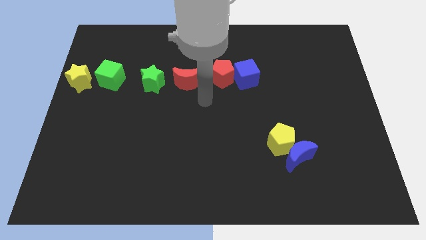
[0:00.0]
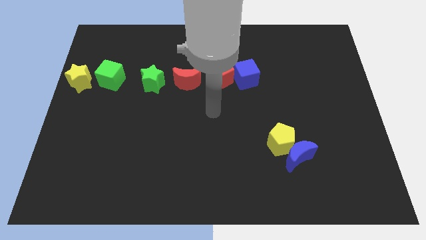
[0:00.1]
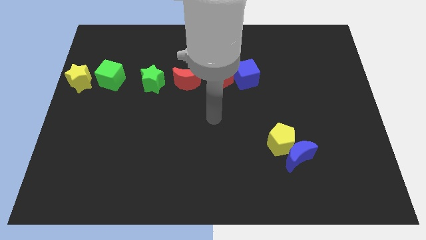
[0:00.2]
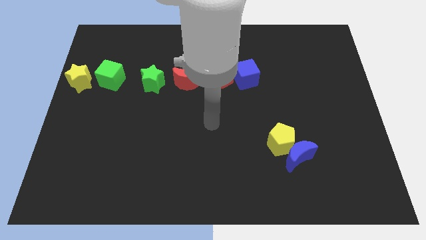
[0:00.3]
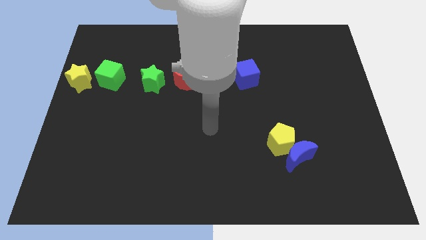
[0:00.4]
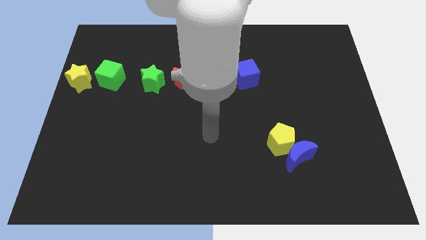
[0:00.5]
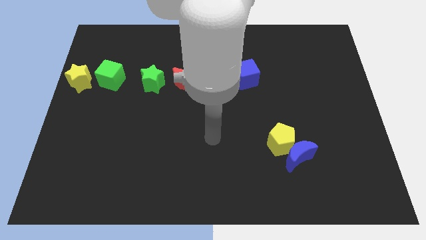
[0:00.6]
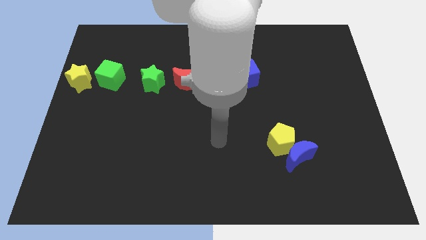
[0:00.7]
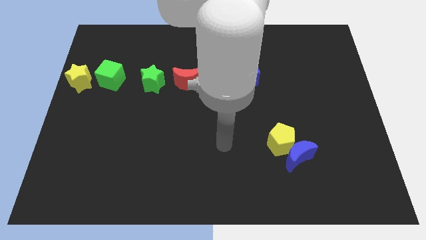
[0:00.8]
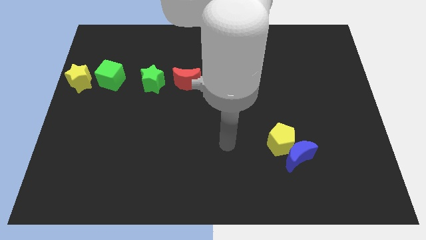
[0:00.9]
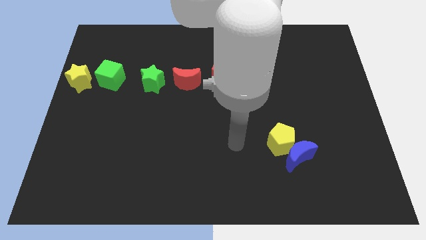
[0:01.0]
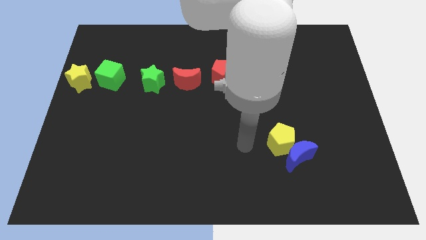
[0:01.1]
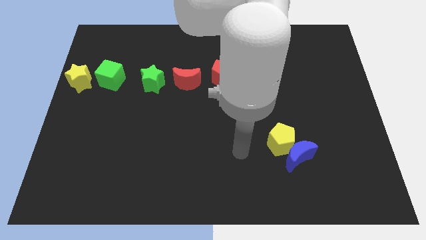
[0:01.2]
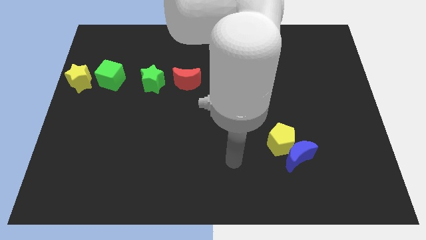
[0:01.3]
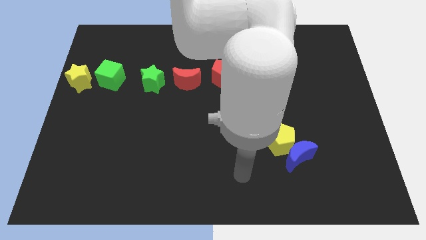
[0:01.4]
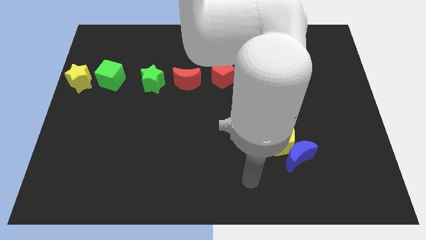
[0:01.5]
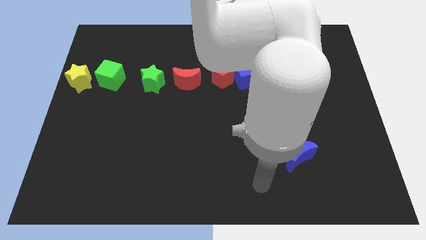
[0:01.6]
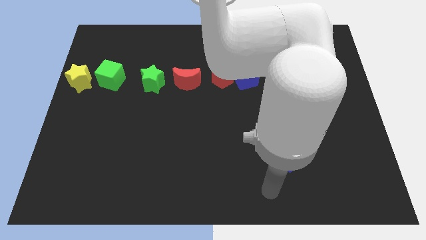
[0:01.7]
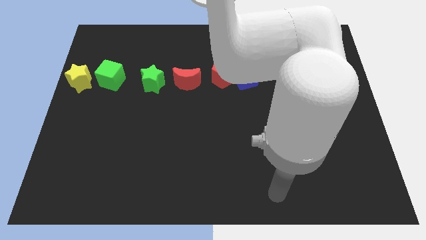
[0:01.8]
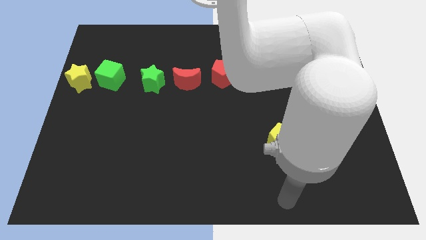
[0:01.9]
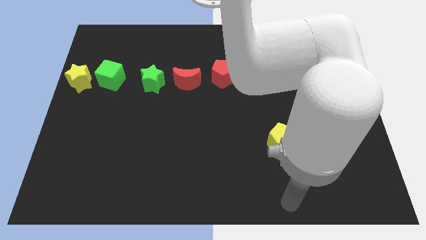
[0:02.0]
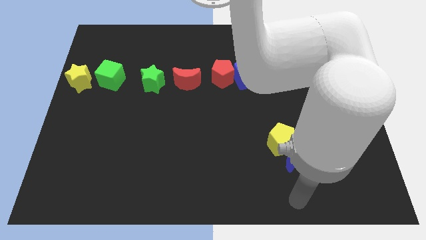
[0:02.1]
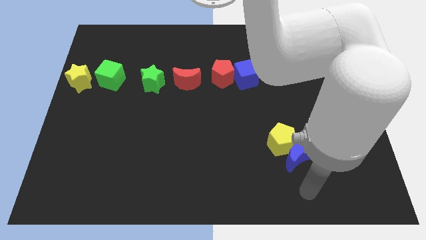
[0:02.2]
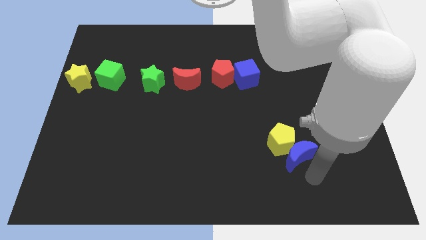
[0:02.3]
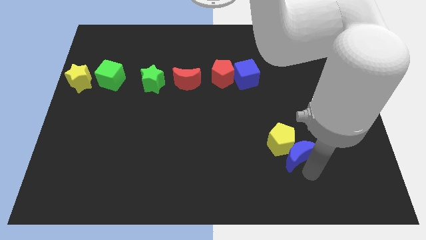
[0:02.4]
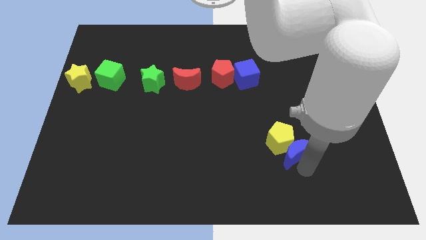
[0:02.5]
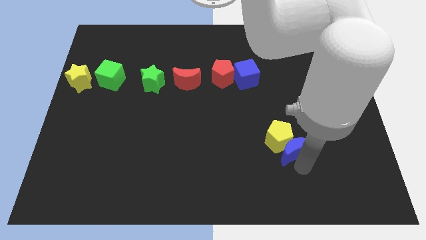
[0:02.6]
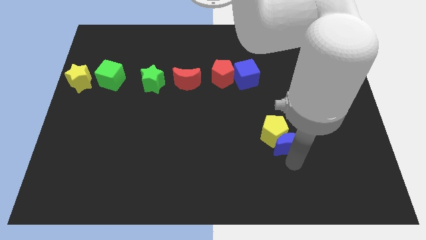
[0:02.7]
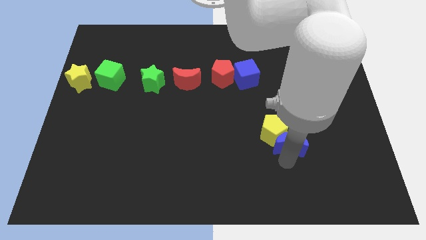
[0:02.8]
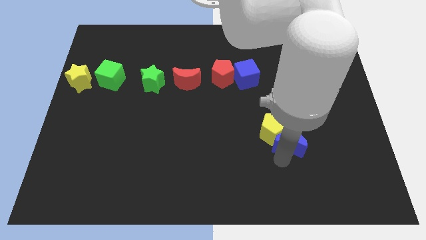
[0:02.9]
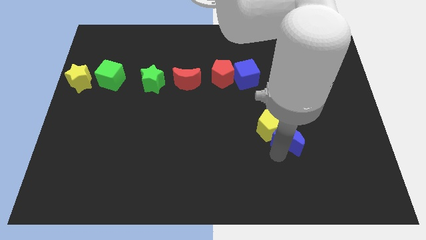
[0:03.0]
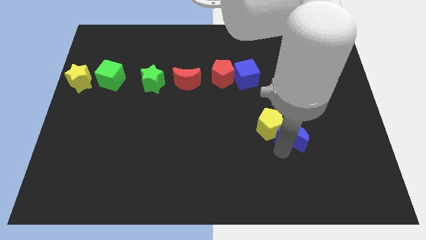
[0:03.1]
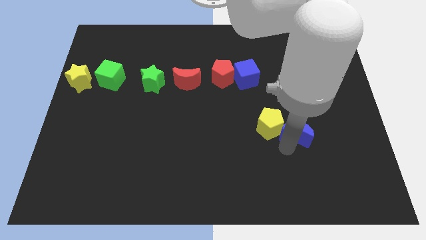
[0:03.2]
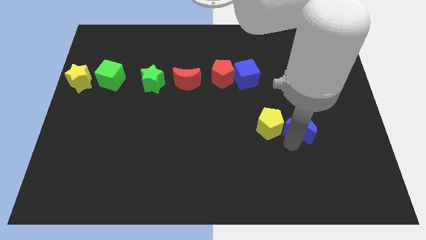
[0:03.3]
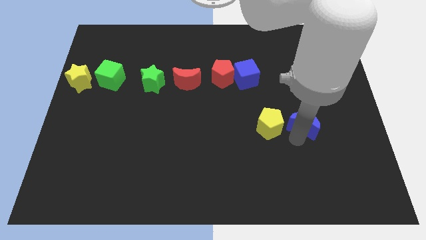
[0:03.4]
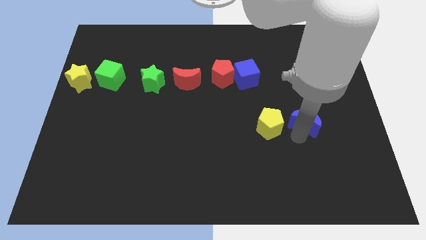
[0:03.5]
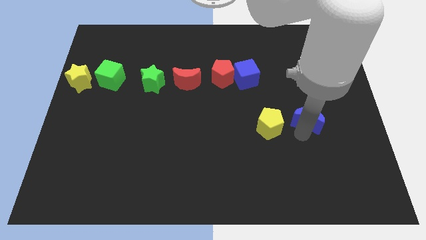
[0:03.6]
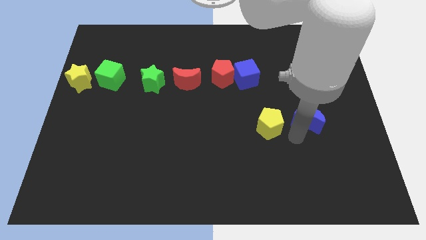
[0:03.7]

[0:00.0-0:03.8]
put the blue crescent to the right of the yellow pentagon

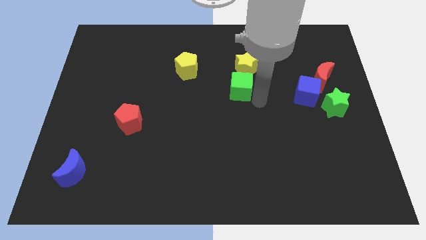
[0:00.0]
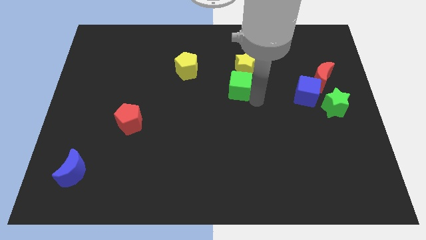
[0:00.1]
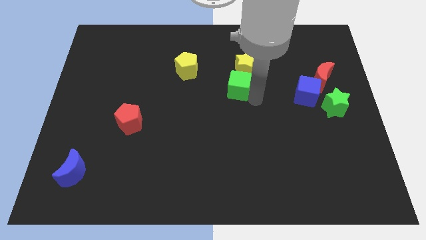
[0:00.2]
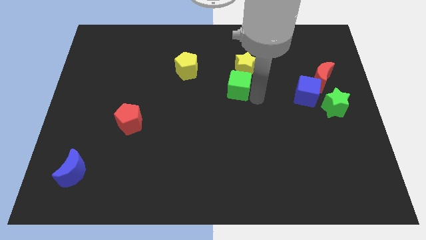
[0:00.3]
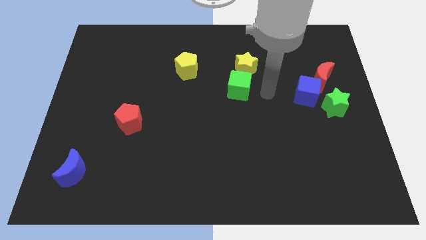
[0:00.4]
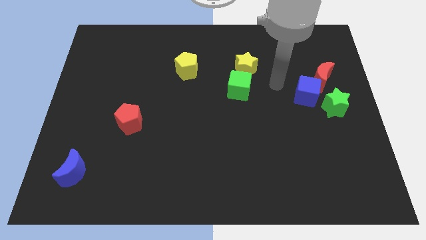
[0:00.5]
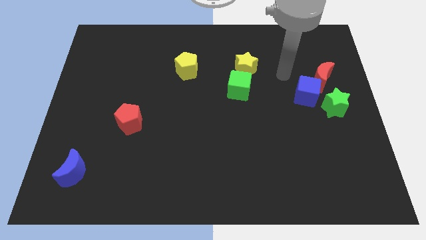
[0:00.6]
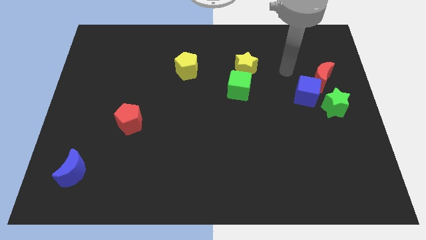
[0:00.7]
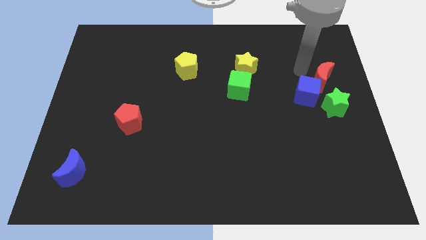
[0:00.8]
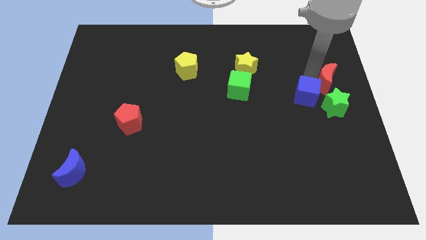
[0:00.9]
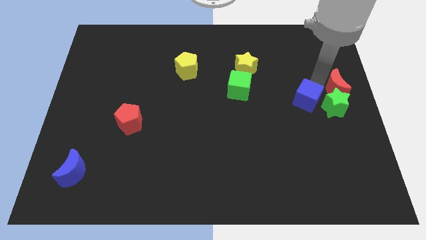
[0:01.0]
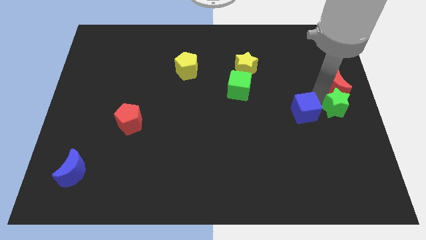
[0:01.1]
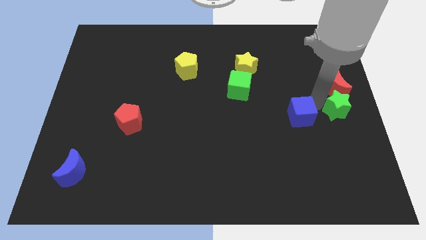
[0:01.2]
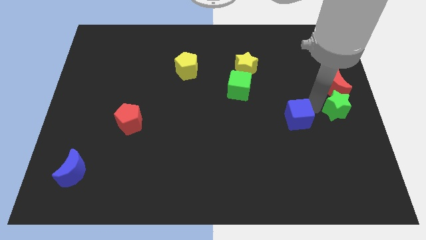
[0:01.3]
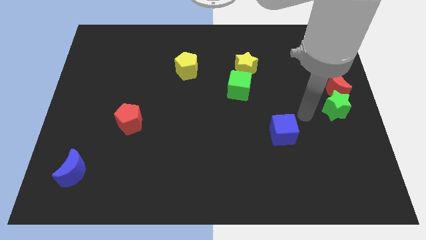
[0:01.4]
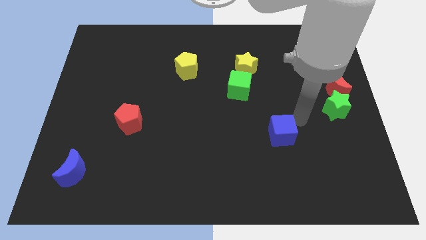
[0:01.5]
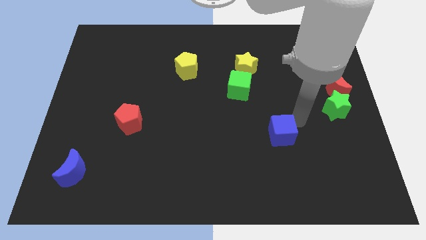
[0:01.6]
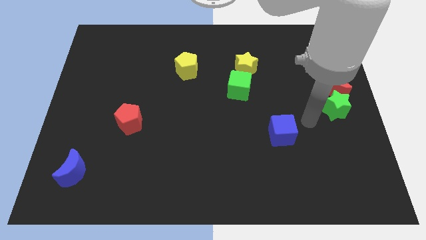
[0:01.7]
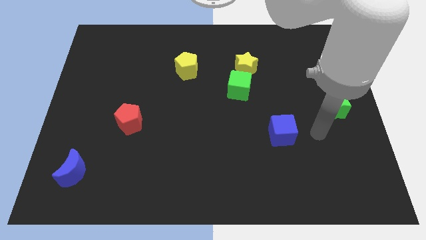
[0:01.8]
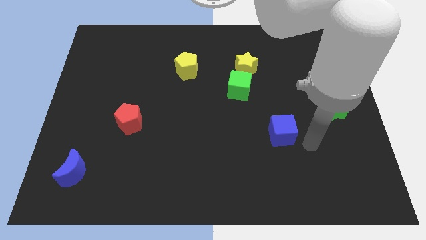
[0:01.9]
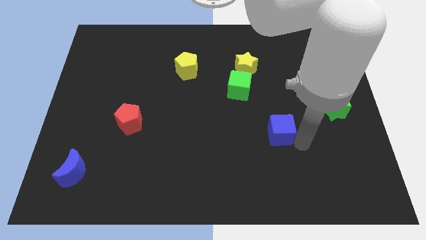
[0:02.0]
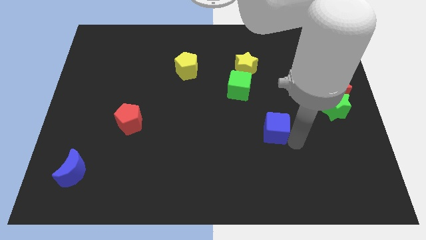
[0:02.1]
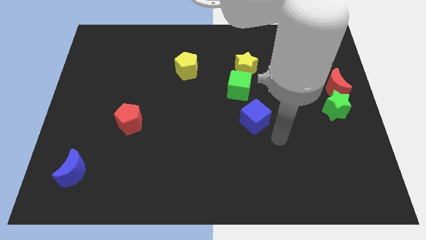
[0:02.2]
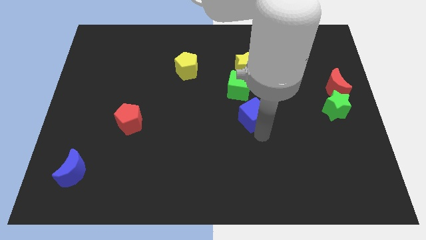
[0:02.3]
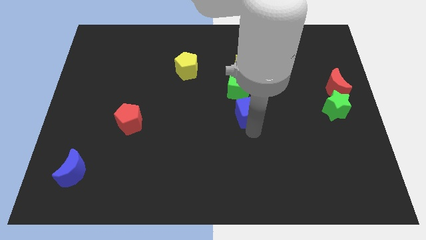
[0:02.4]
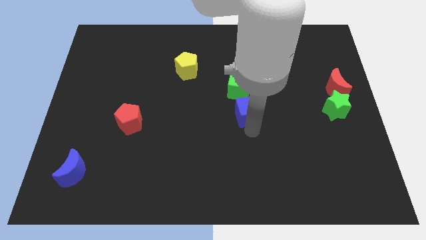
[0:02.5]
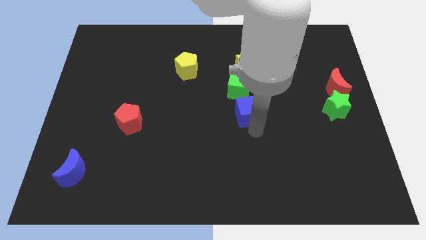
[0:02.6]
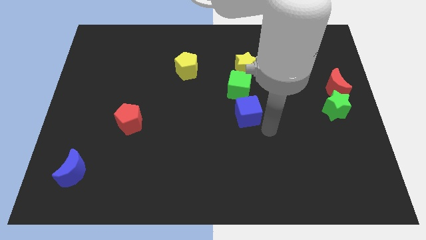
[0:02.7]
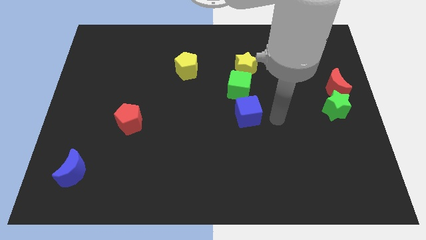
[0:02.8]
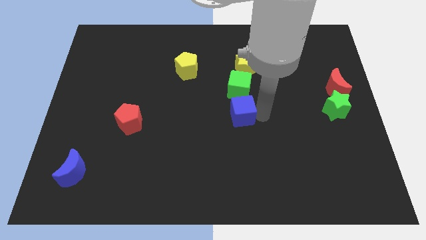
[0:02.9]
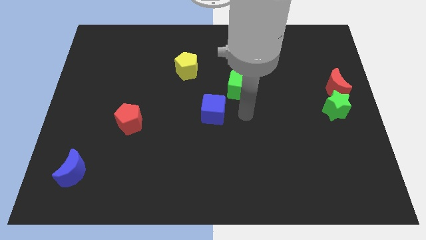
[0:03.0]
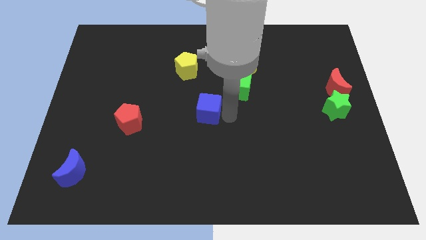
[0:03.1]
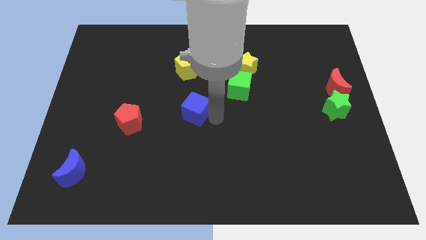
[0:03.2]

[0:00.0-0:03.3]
place the blue cube diagonal to the green cube

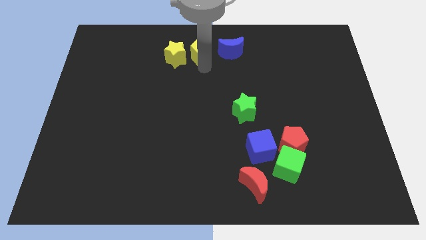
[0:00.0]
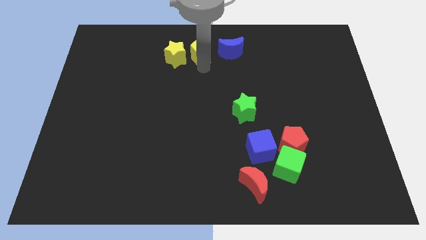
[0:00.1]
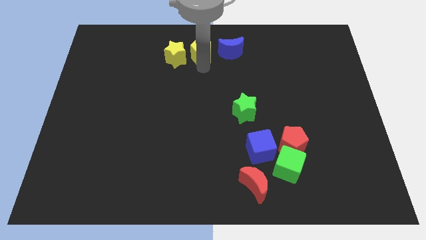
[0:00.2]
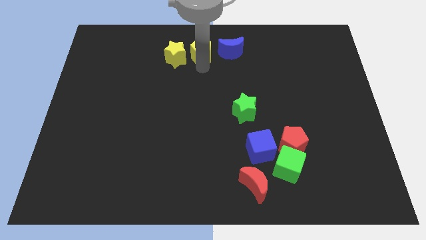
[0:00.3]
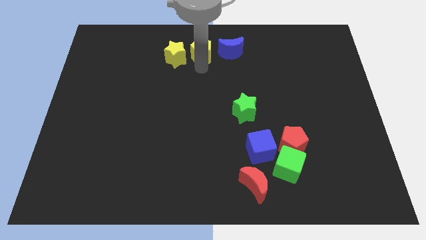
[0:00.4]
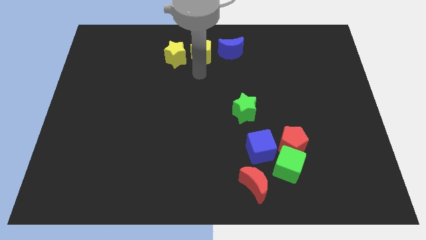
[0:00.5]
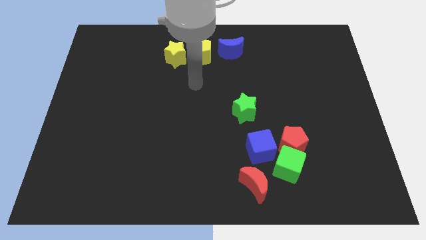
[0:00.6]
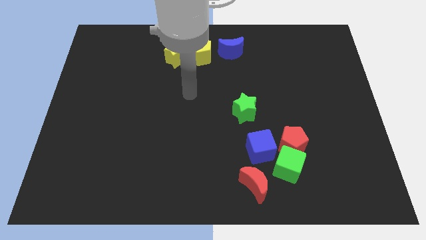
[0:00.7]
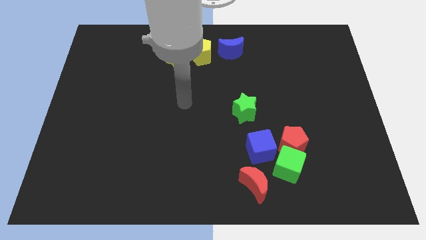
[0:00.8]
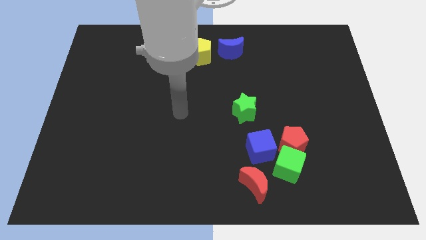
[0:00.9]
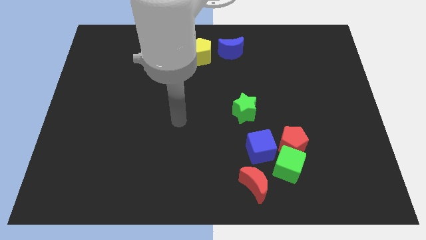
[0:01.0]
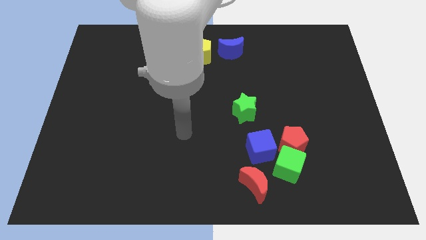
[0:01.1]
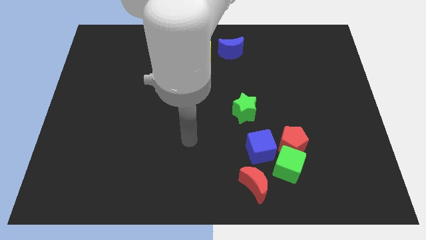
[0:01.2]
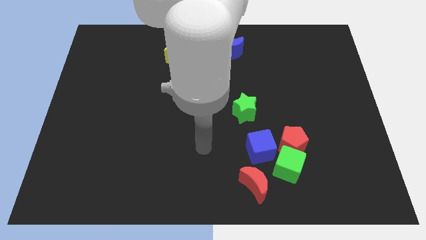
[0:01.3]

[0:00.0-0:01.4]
tap the yellow pentagon

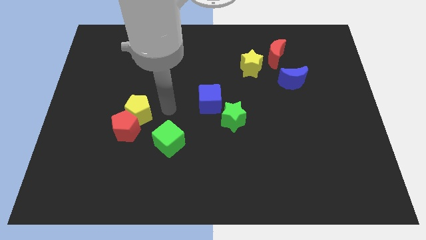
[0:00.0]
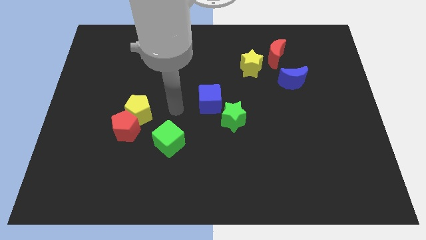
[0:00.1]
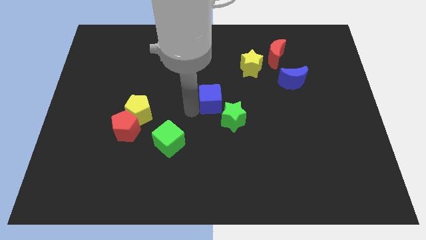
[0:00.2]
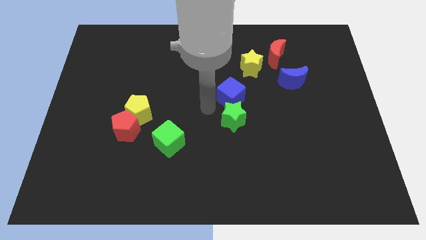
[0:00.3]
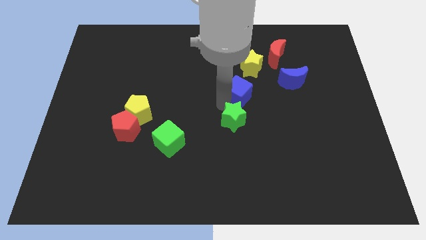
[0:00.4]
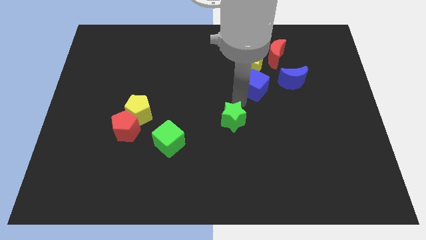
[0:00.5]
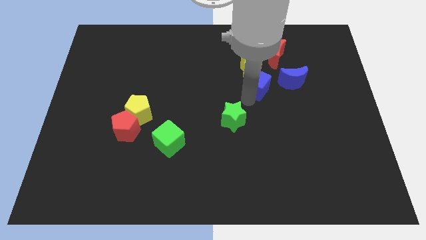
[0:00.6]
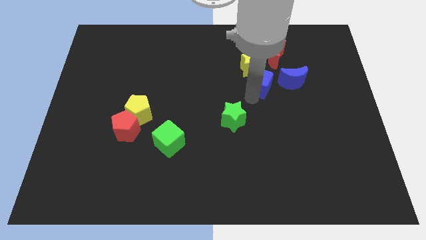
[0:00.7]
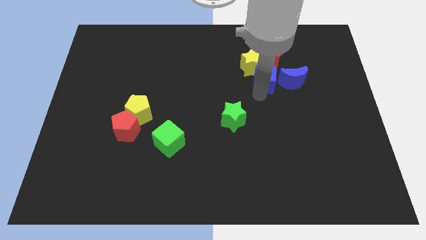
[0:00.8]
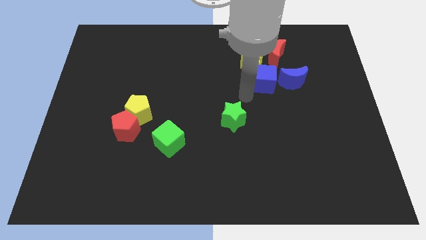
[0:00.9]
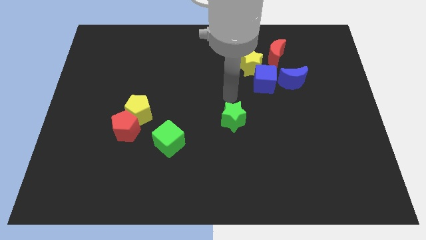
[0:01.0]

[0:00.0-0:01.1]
push blue cube to the left of blue moon
